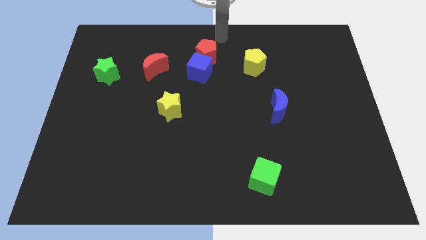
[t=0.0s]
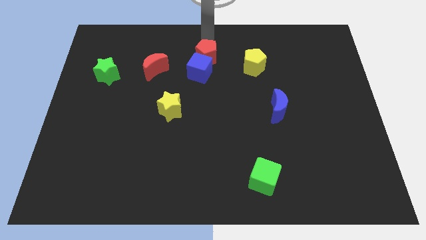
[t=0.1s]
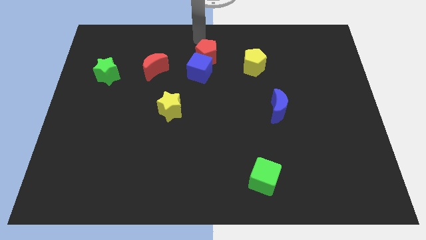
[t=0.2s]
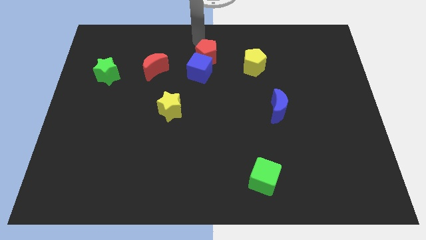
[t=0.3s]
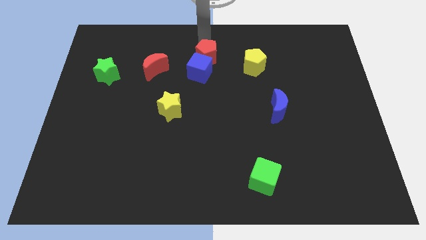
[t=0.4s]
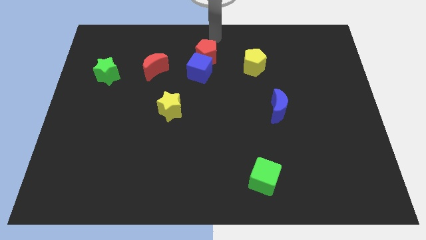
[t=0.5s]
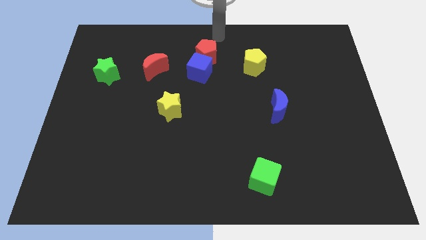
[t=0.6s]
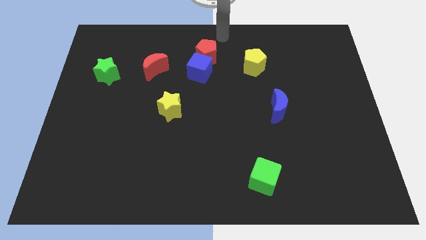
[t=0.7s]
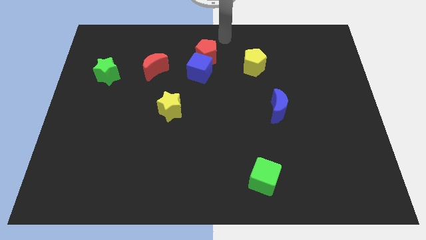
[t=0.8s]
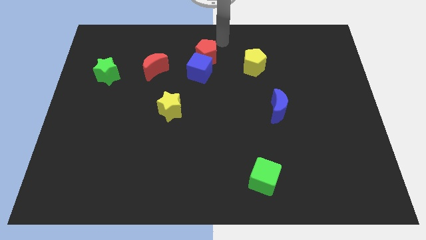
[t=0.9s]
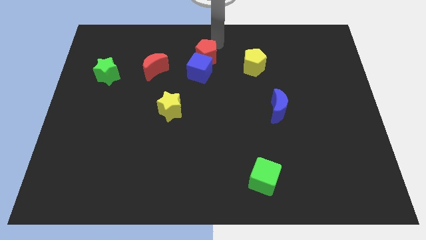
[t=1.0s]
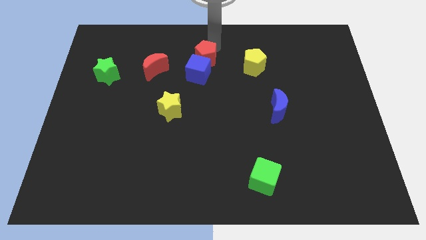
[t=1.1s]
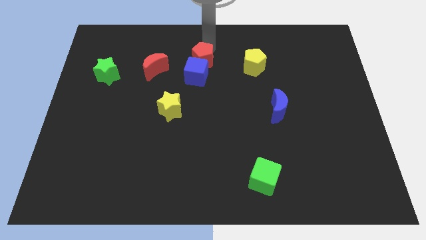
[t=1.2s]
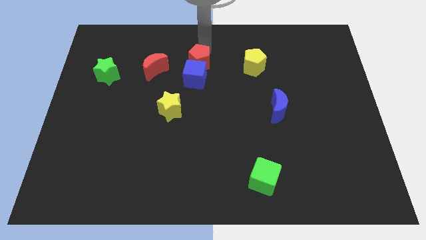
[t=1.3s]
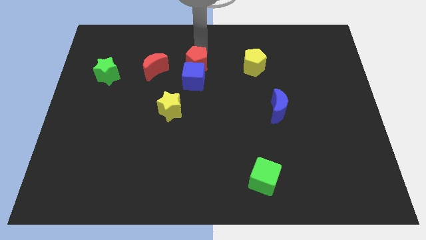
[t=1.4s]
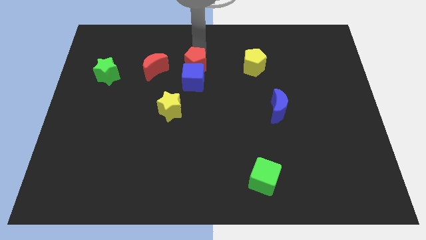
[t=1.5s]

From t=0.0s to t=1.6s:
push the red pentagon and blue cube towards the center of the board

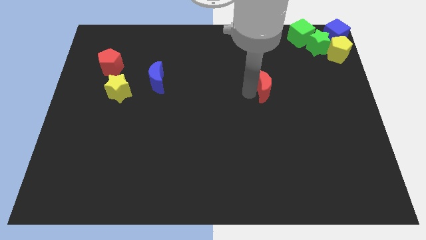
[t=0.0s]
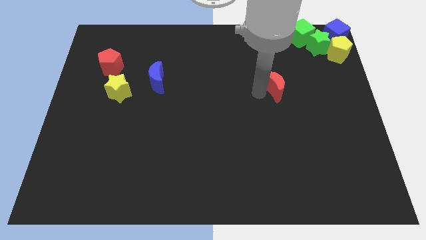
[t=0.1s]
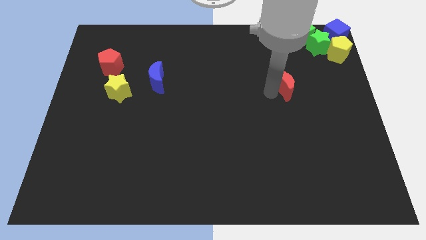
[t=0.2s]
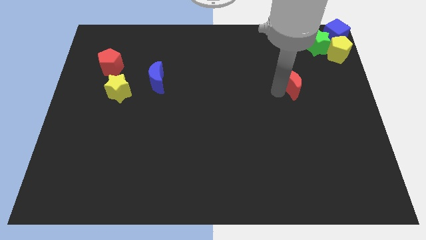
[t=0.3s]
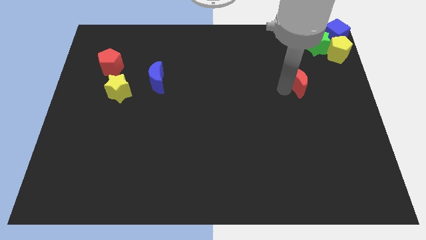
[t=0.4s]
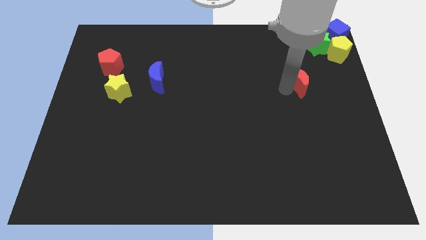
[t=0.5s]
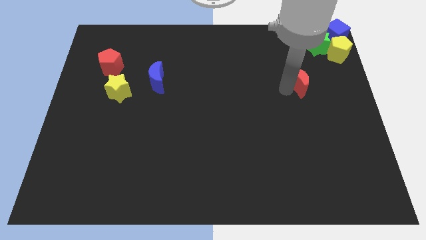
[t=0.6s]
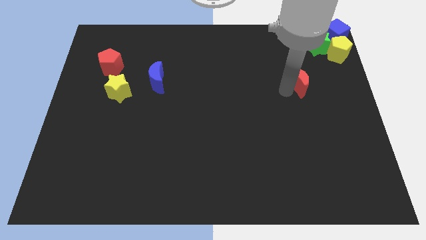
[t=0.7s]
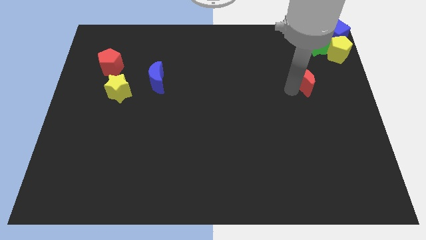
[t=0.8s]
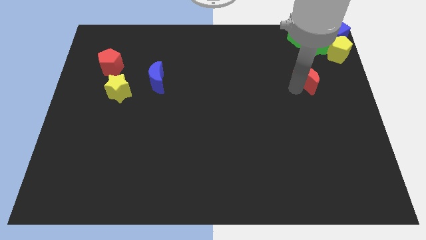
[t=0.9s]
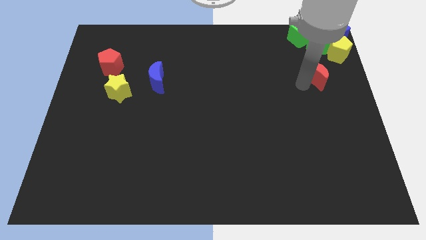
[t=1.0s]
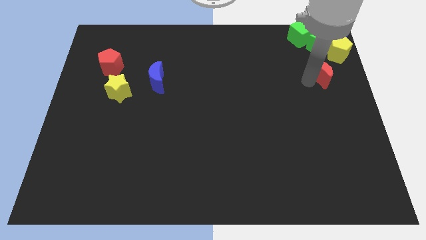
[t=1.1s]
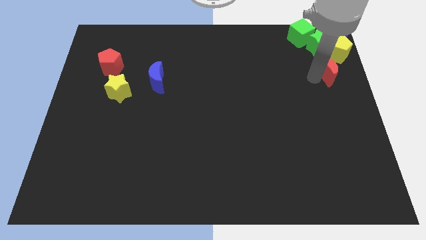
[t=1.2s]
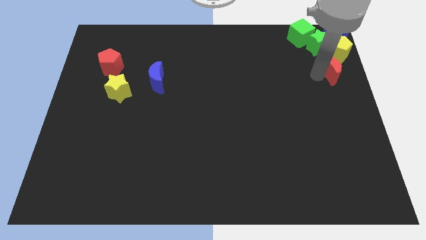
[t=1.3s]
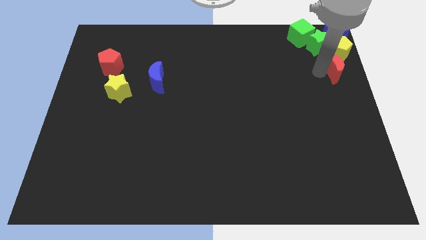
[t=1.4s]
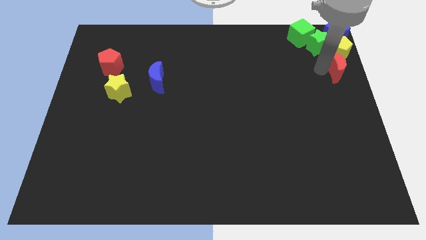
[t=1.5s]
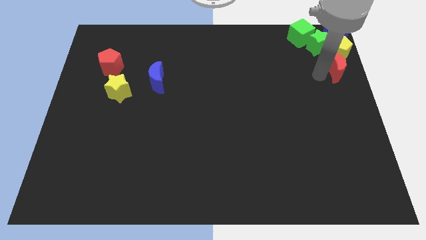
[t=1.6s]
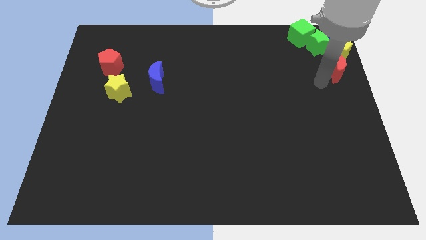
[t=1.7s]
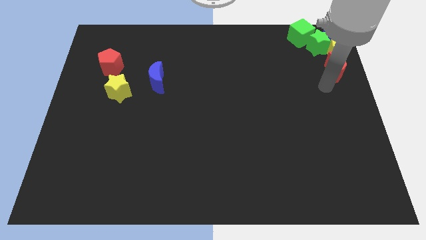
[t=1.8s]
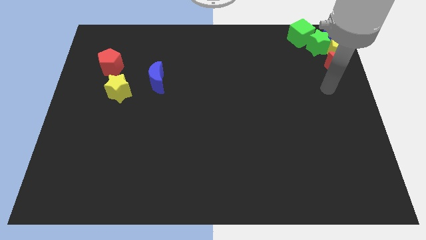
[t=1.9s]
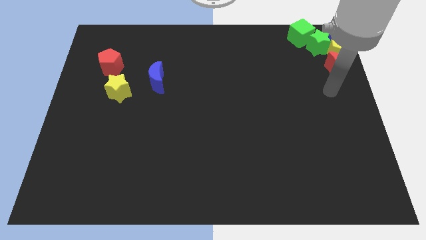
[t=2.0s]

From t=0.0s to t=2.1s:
place the red moon to the bottom side of the yellow pentagon

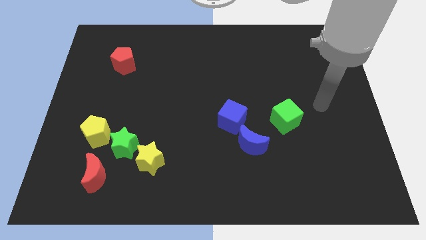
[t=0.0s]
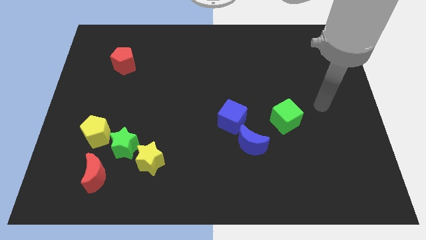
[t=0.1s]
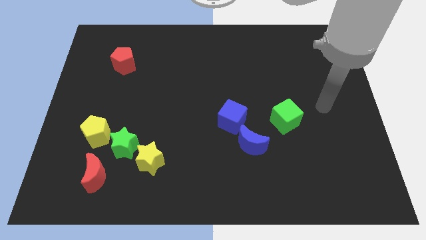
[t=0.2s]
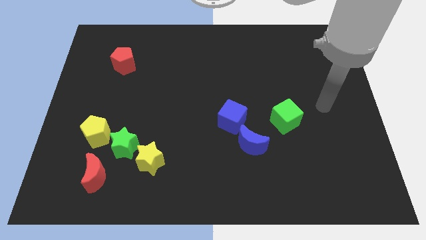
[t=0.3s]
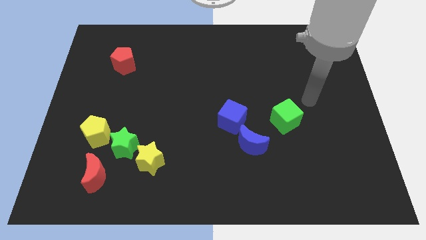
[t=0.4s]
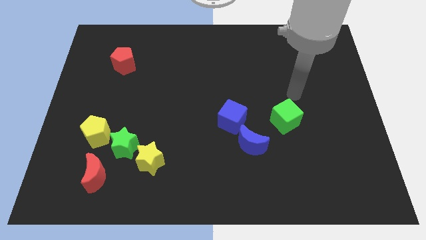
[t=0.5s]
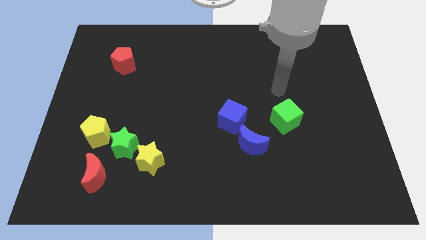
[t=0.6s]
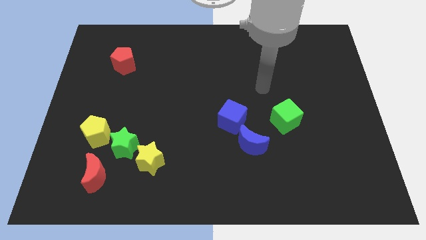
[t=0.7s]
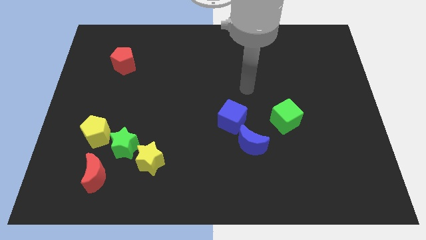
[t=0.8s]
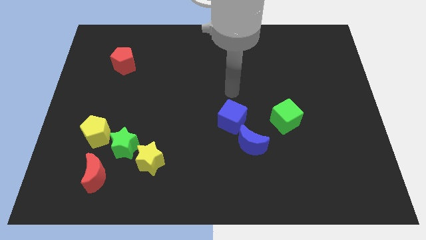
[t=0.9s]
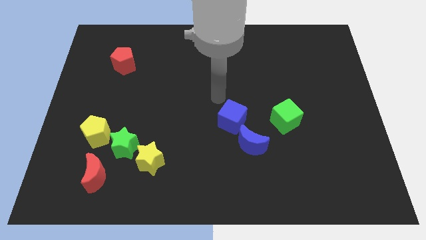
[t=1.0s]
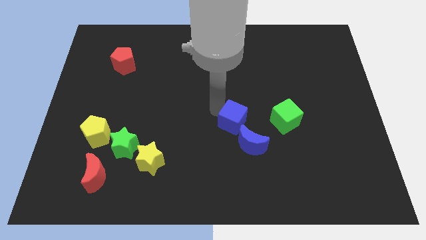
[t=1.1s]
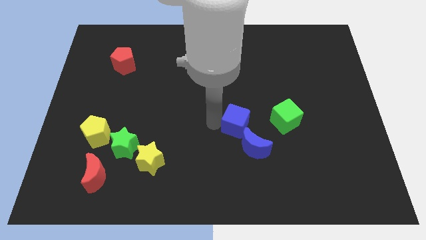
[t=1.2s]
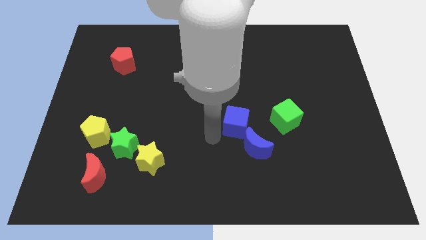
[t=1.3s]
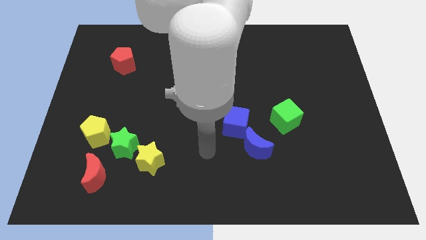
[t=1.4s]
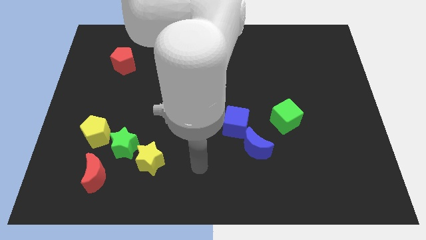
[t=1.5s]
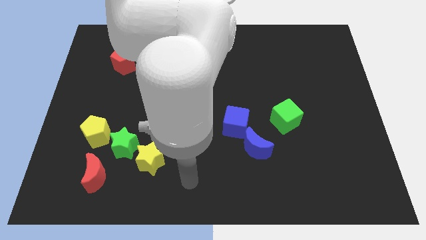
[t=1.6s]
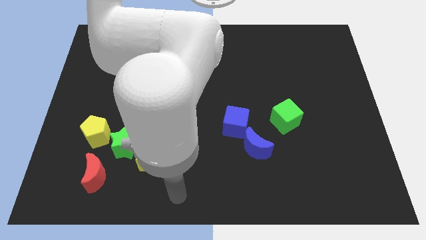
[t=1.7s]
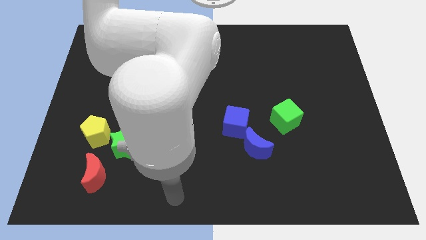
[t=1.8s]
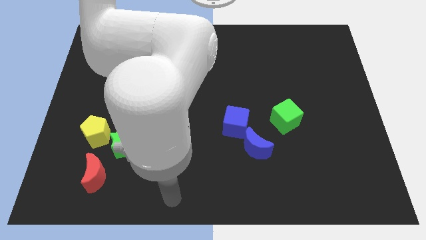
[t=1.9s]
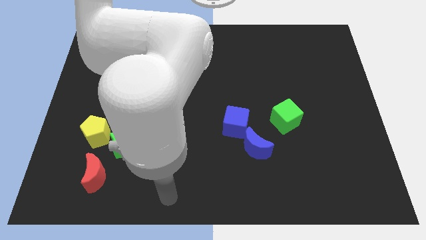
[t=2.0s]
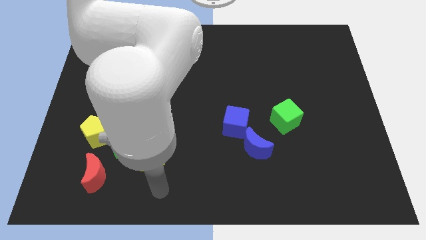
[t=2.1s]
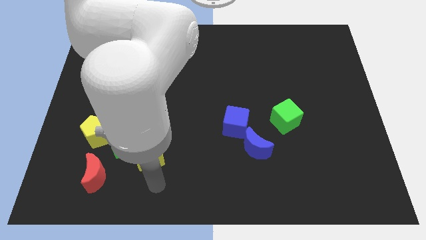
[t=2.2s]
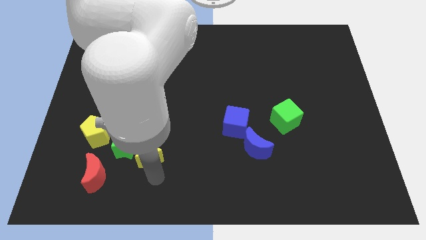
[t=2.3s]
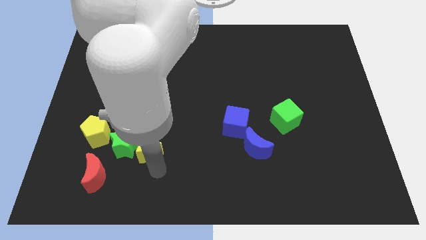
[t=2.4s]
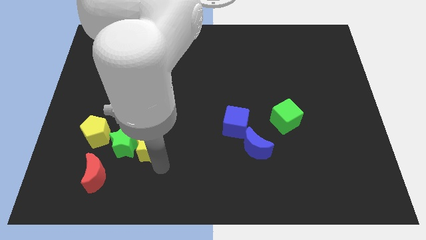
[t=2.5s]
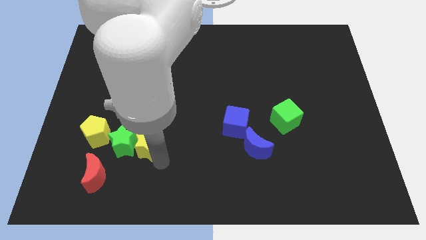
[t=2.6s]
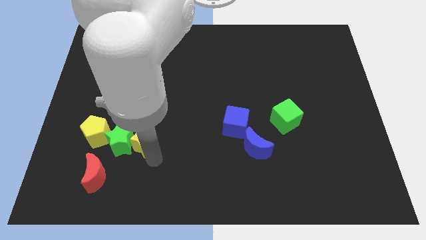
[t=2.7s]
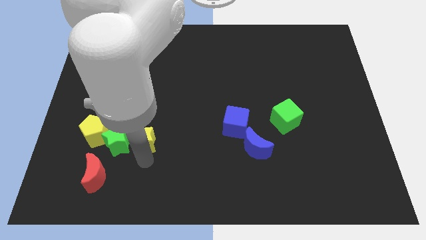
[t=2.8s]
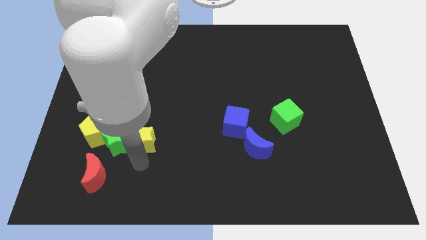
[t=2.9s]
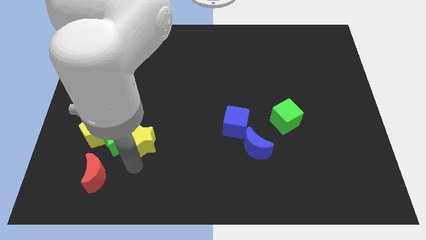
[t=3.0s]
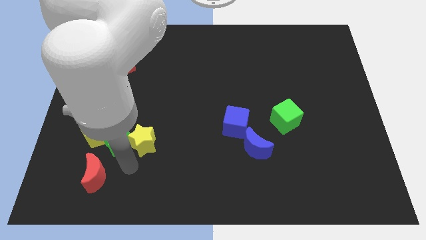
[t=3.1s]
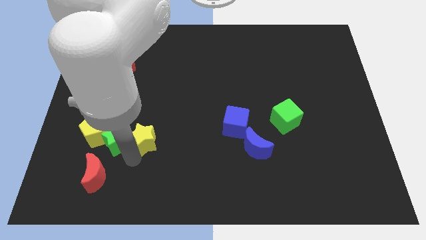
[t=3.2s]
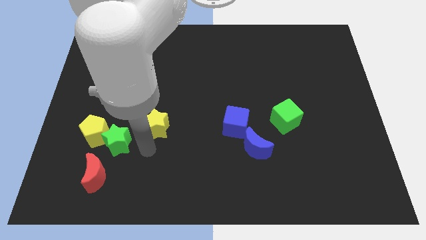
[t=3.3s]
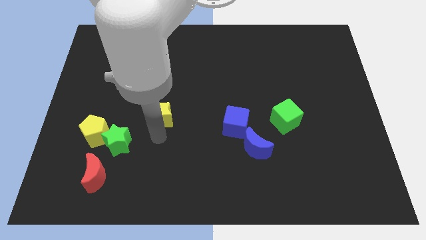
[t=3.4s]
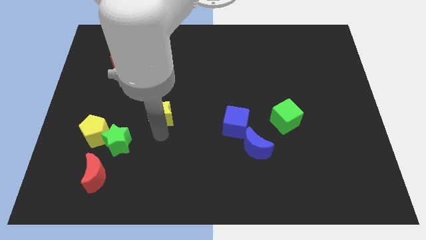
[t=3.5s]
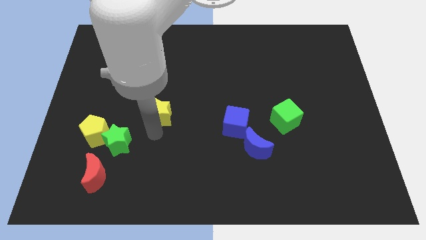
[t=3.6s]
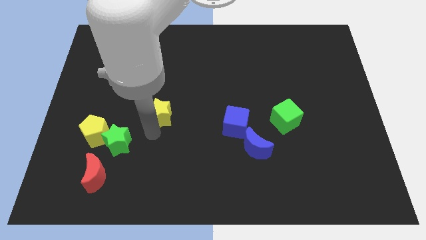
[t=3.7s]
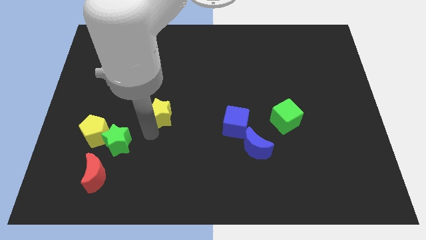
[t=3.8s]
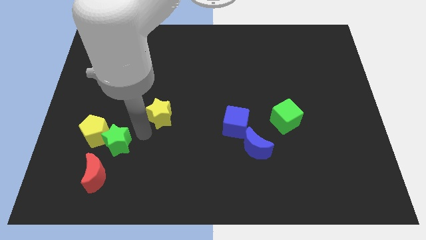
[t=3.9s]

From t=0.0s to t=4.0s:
place the yellow star to the left of the blue cube

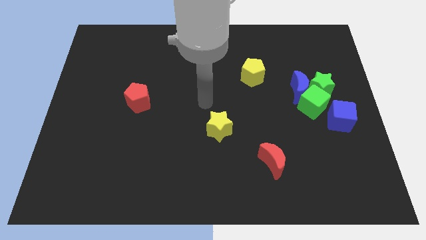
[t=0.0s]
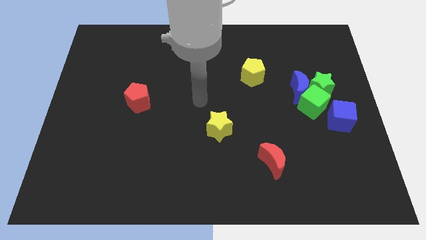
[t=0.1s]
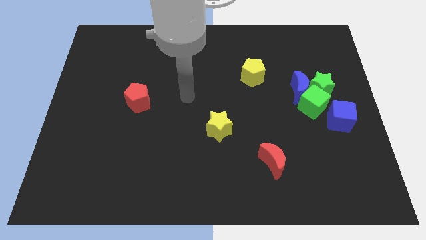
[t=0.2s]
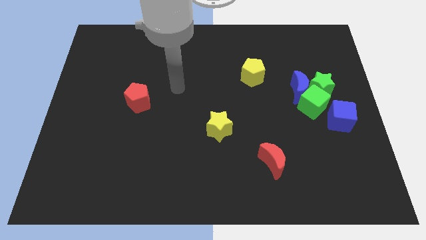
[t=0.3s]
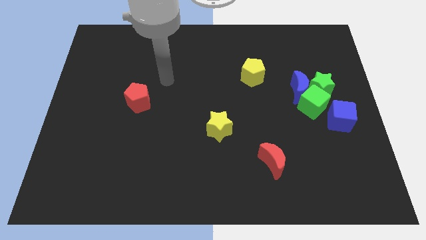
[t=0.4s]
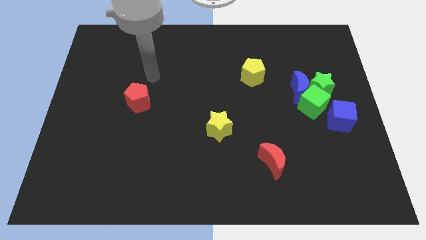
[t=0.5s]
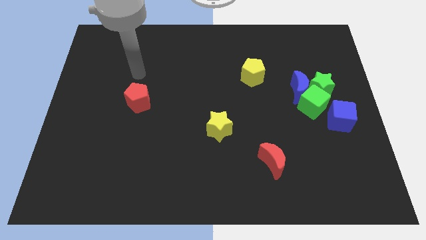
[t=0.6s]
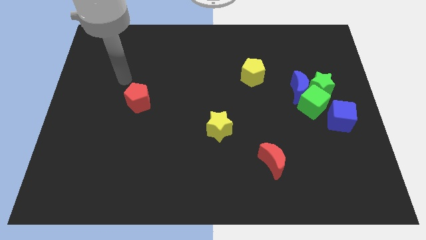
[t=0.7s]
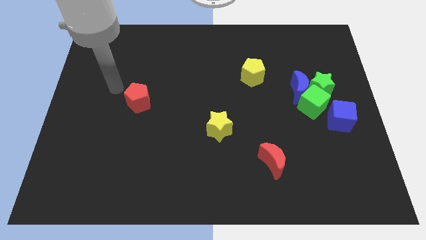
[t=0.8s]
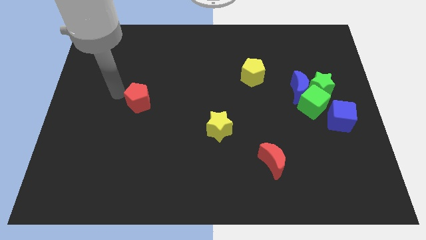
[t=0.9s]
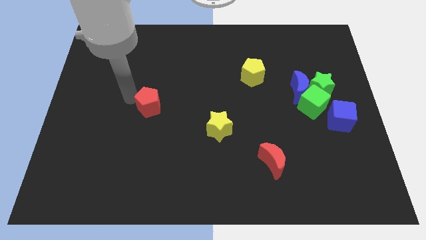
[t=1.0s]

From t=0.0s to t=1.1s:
move the red pentagon slightly towards the yellow yellow star

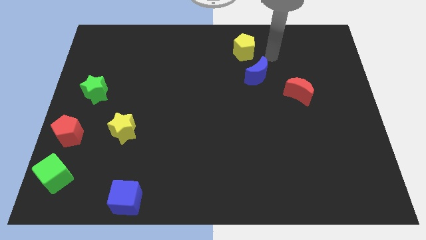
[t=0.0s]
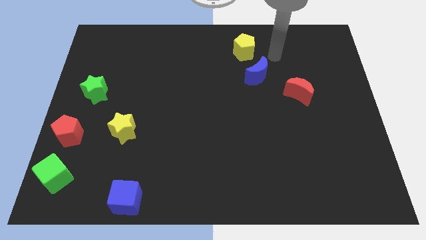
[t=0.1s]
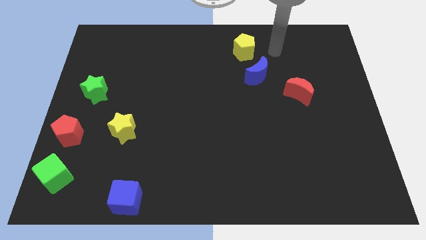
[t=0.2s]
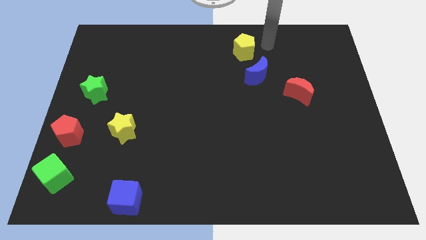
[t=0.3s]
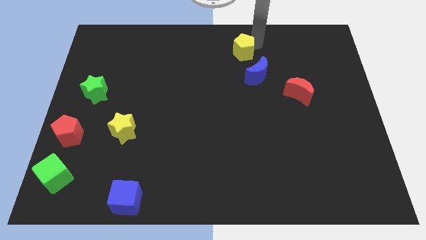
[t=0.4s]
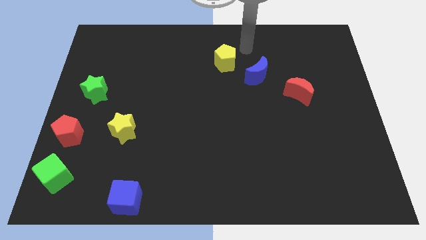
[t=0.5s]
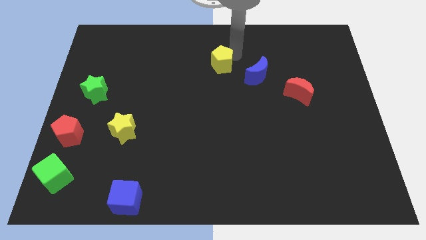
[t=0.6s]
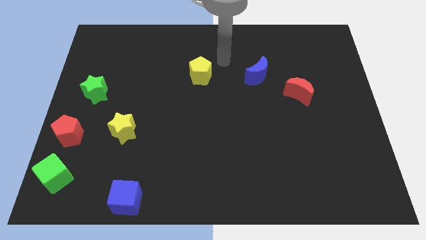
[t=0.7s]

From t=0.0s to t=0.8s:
push the yellow pentagon to the left of the blue crescent
